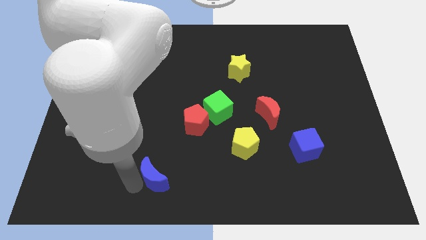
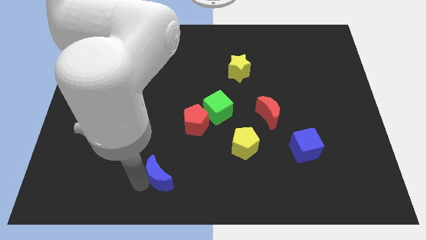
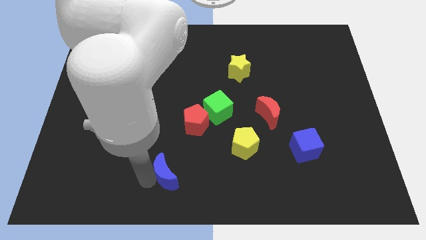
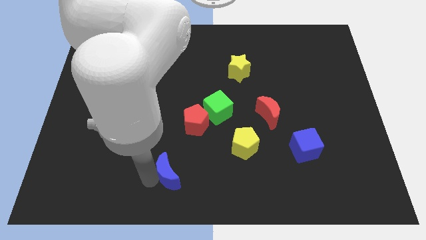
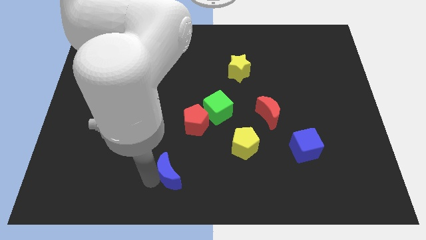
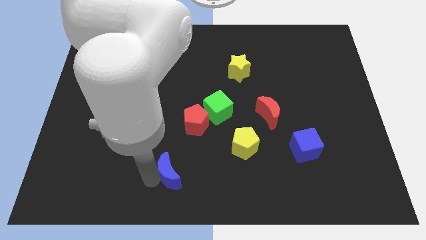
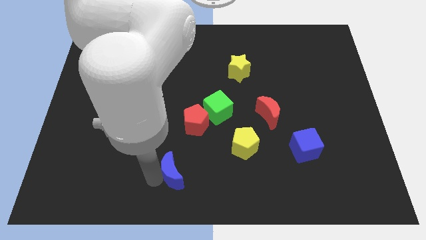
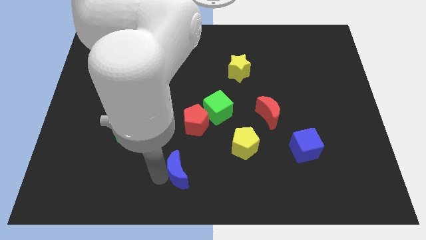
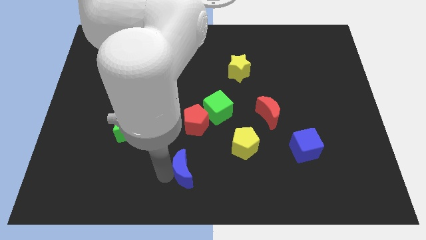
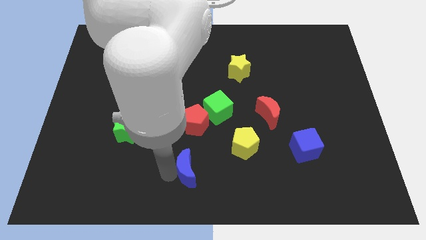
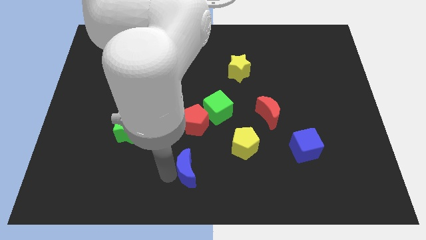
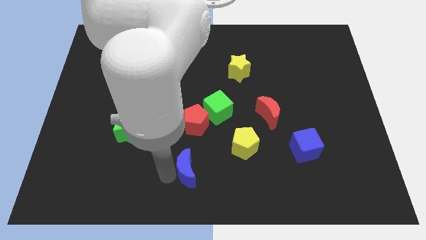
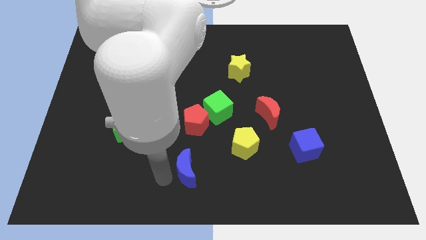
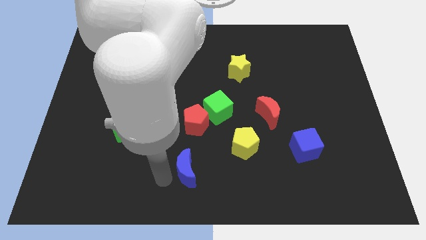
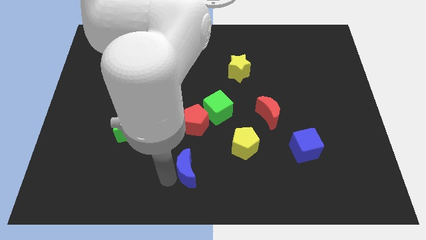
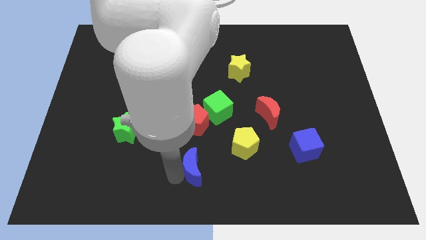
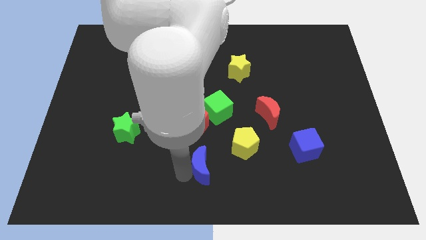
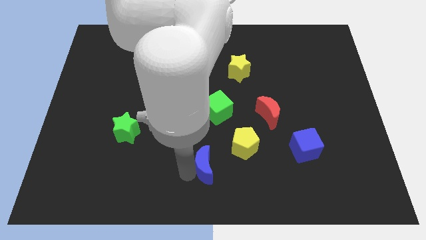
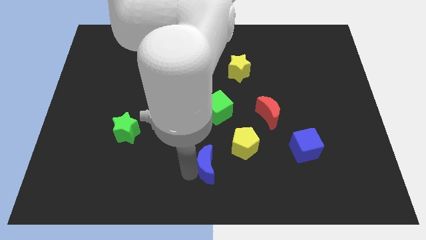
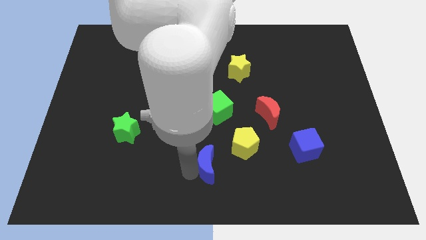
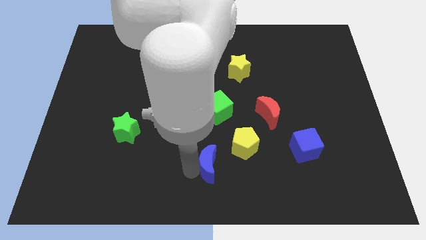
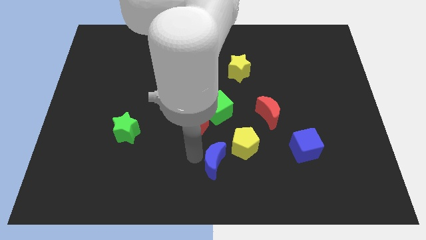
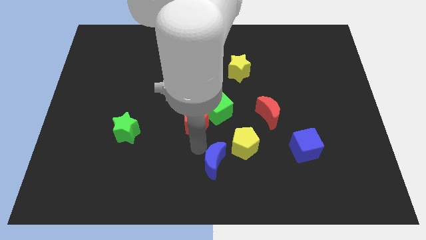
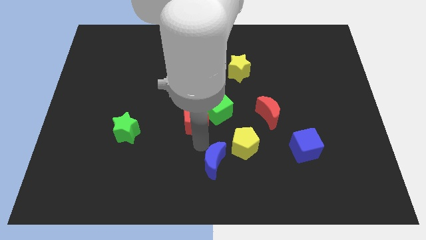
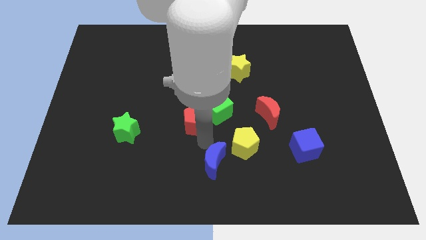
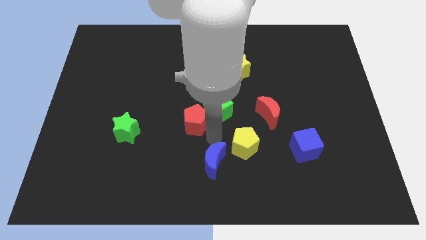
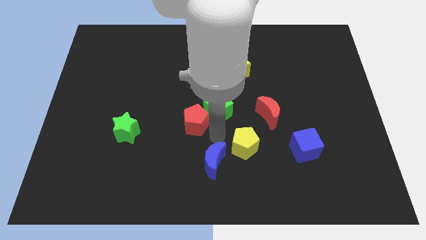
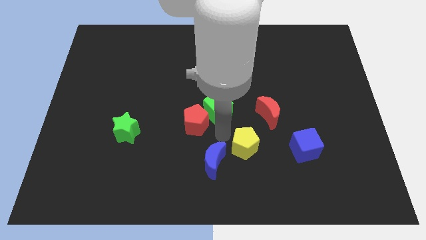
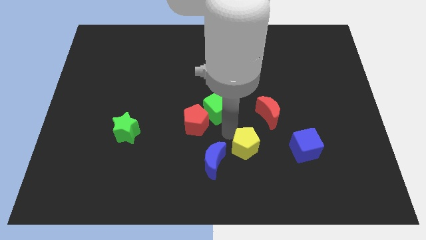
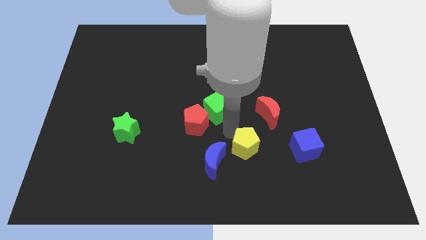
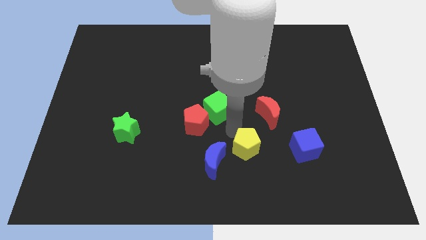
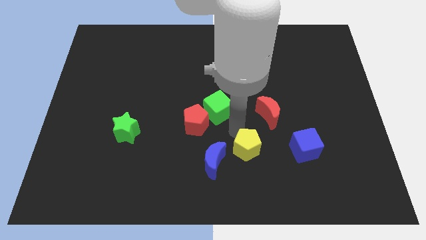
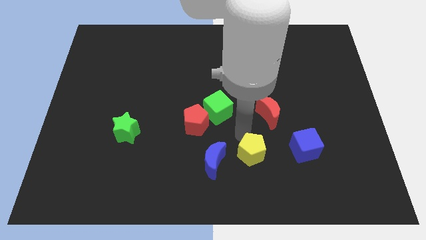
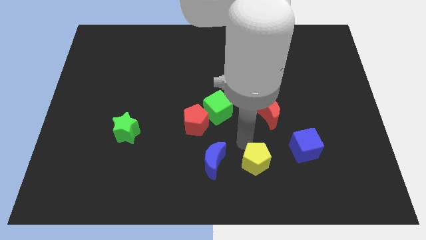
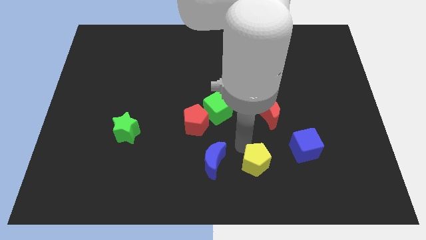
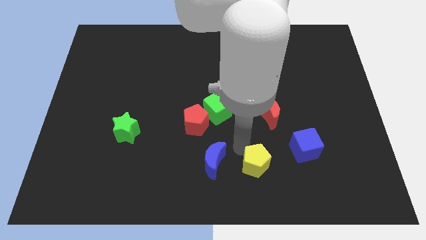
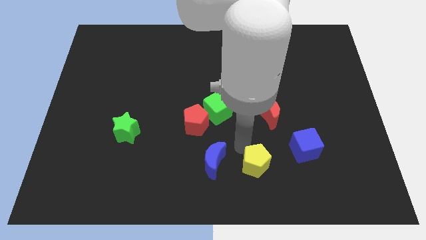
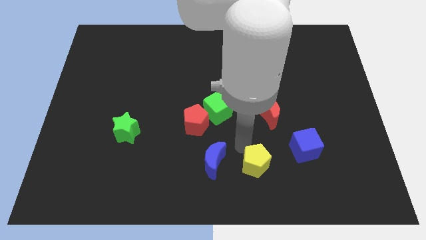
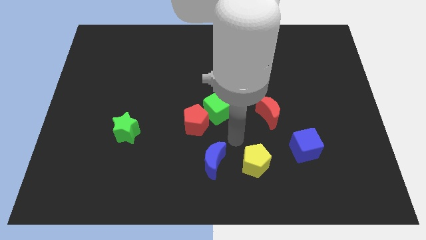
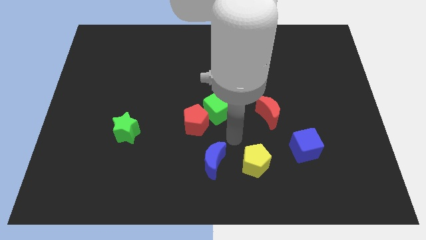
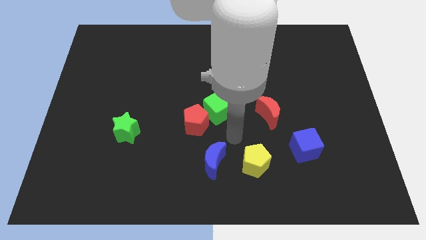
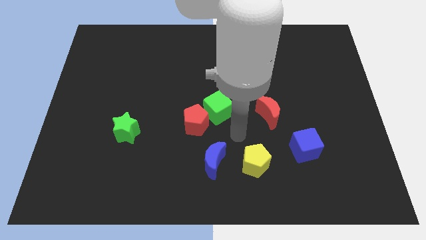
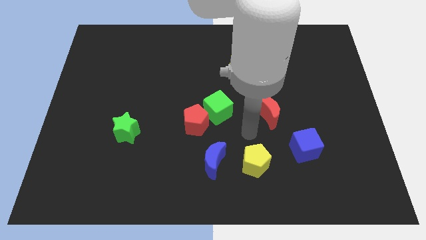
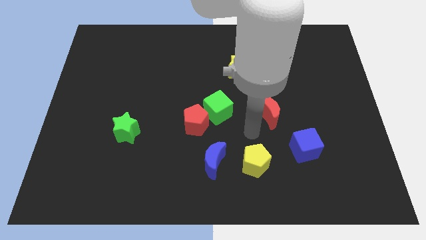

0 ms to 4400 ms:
move the blue moon and yellow pentagon in a horizontal line at the bottom side of the green cube

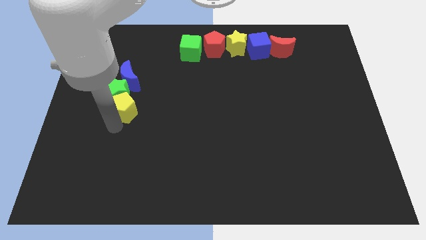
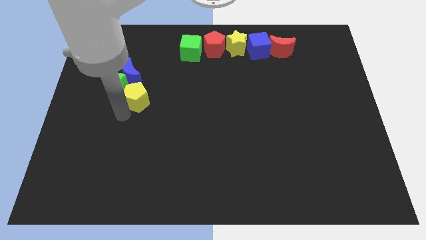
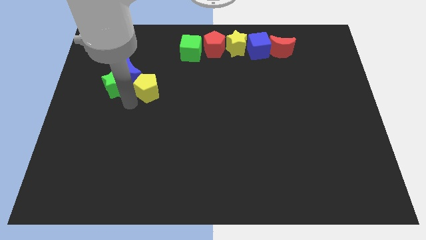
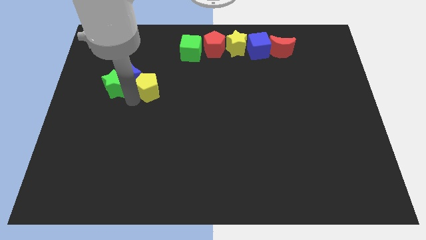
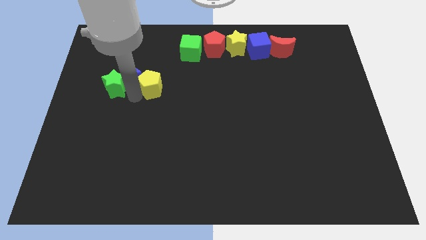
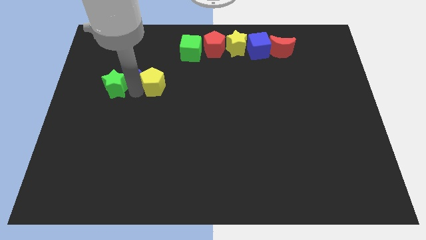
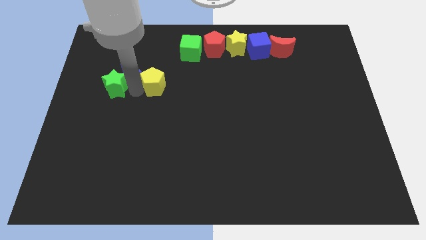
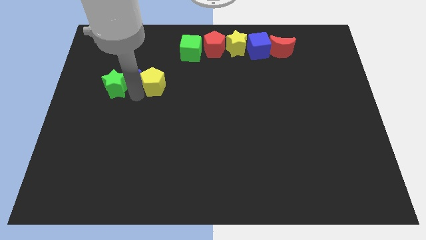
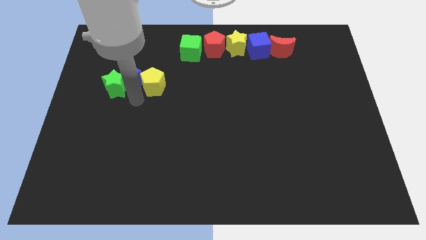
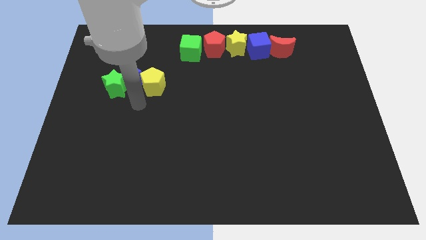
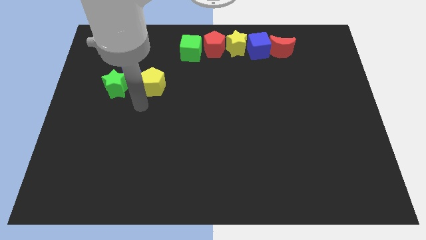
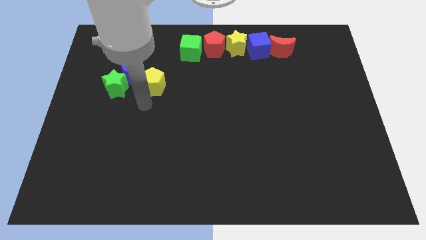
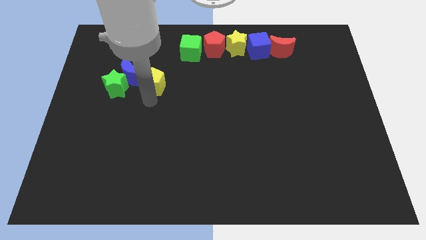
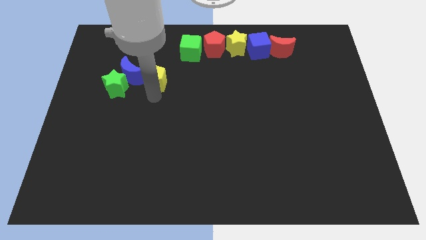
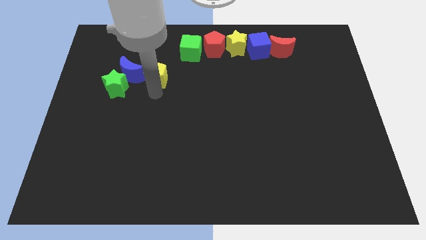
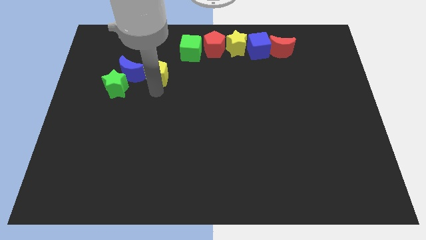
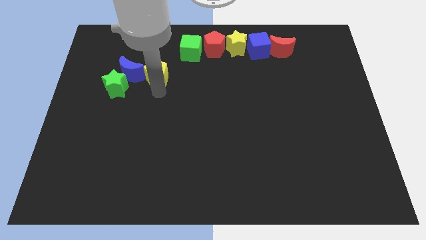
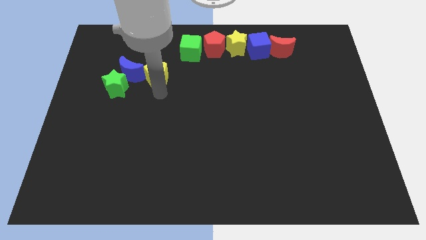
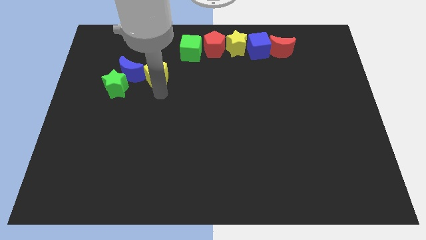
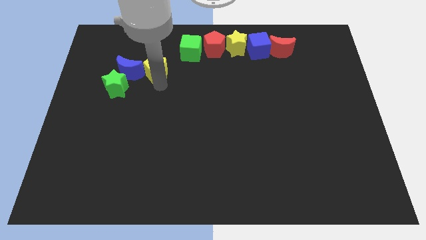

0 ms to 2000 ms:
push yellow pentagon to the right of the blue moon

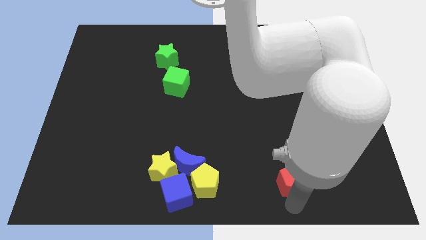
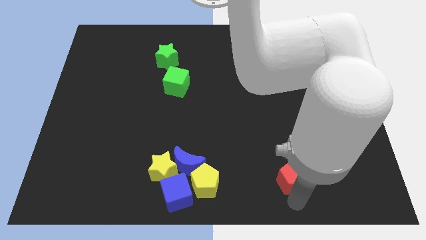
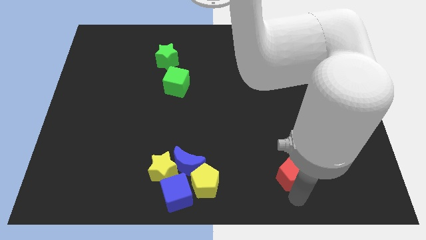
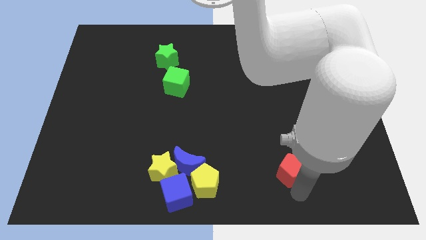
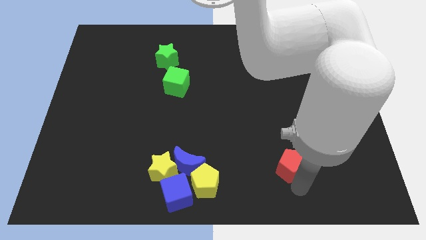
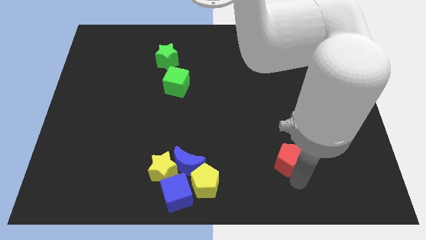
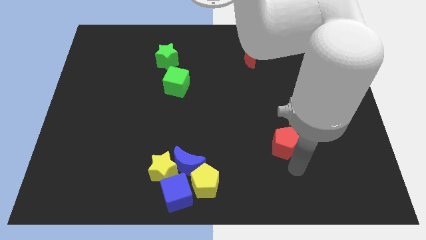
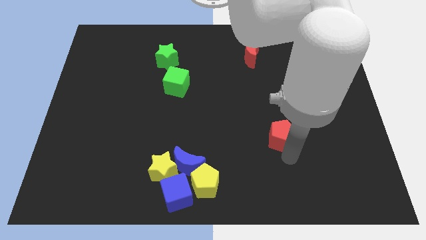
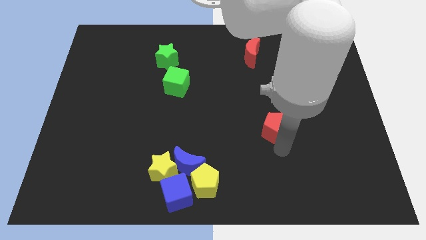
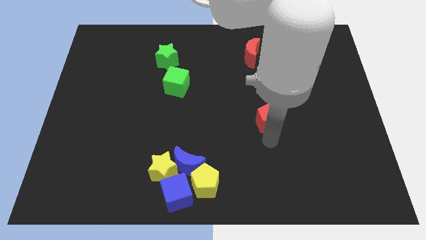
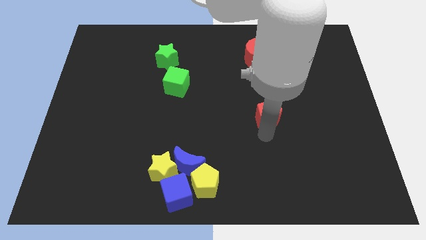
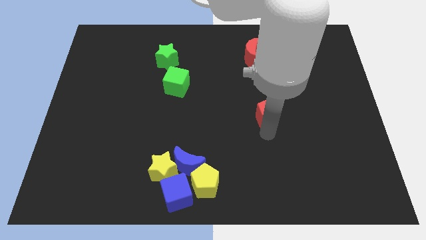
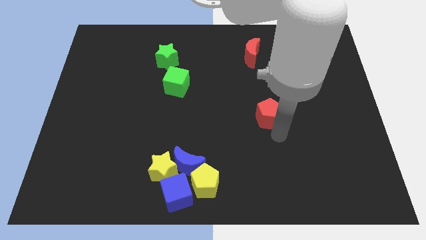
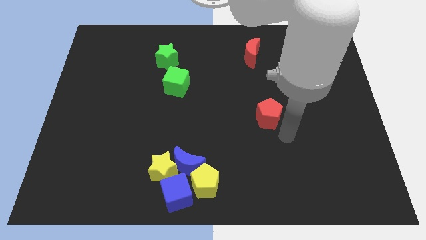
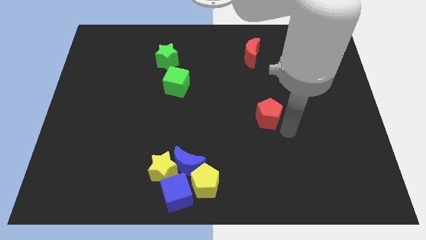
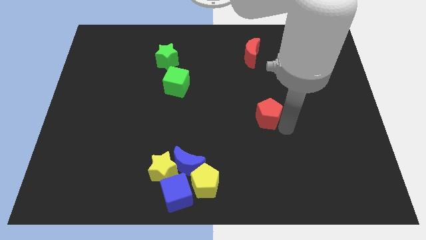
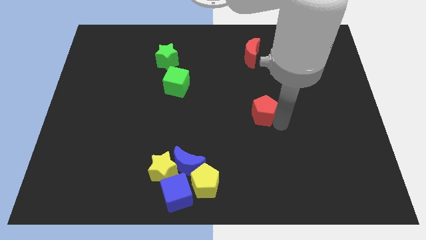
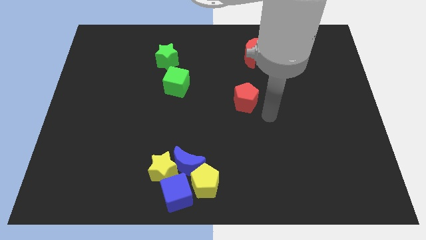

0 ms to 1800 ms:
place the red pentagon towards center of the board

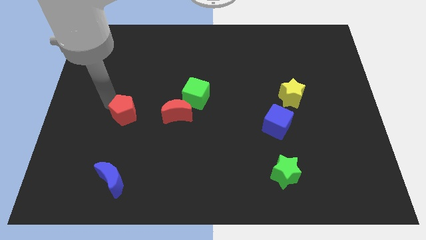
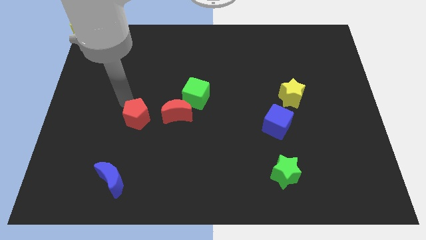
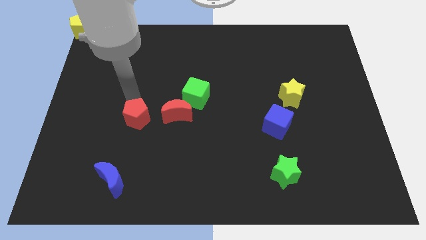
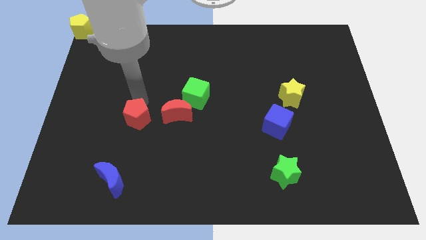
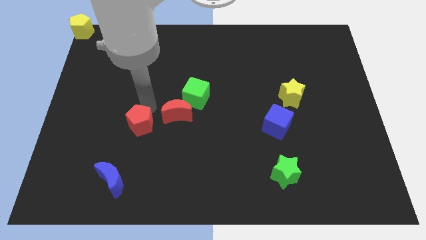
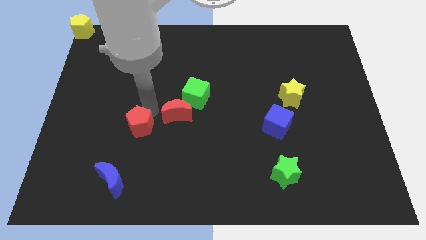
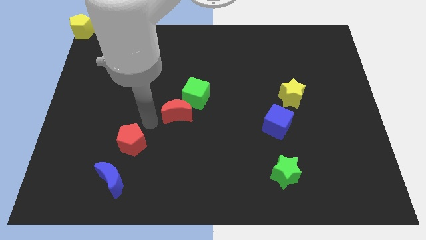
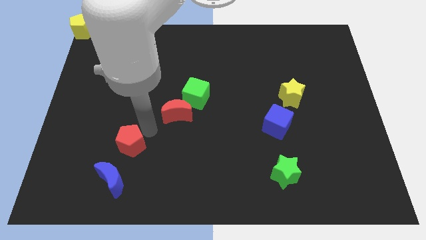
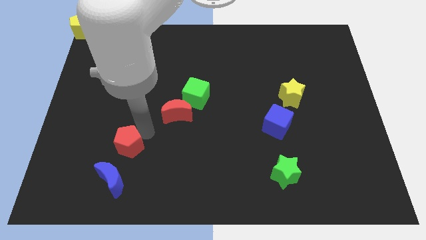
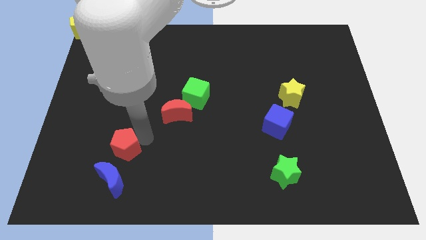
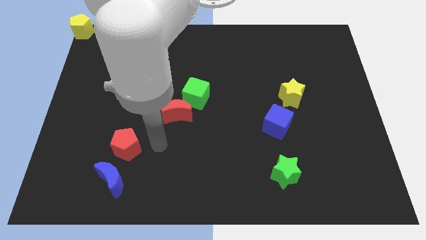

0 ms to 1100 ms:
push the red pentagon to the top of blue crescent
